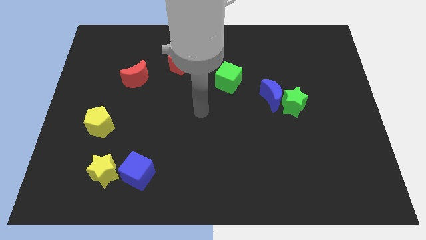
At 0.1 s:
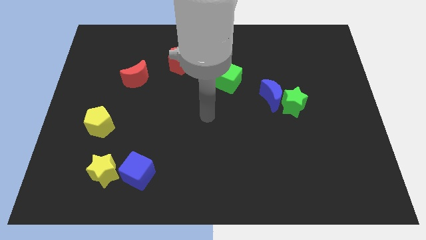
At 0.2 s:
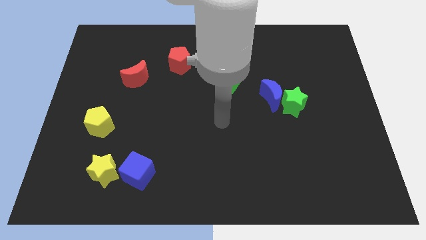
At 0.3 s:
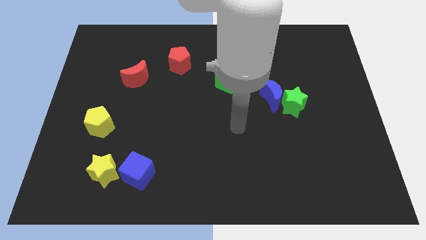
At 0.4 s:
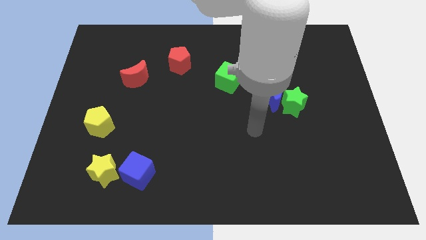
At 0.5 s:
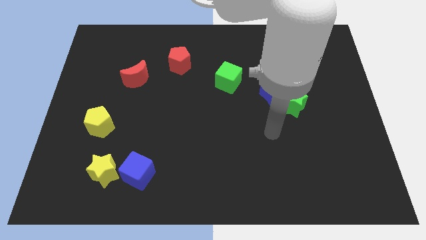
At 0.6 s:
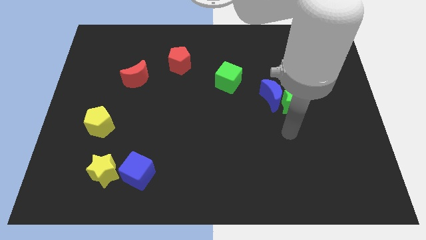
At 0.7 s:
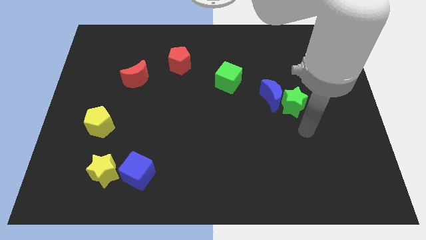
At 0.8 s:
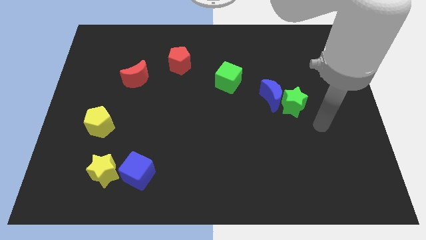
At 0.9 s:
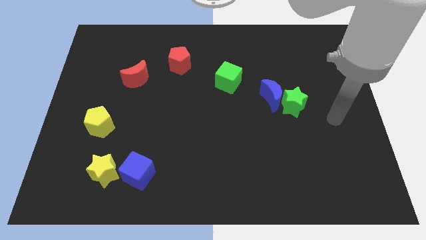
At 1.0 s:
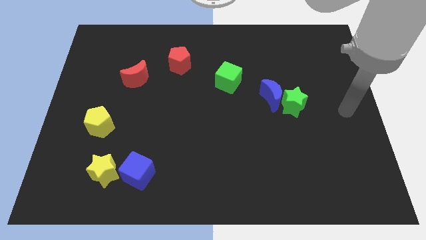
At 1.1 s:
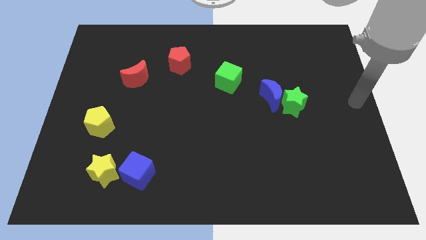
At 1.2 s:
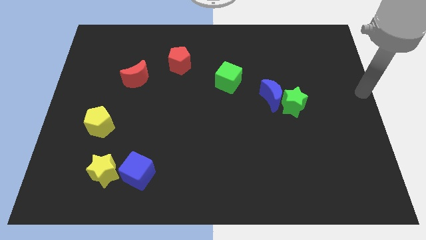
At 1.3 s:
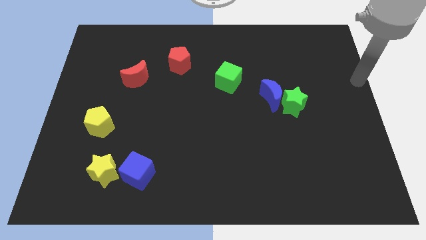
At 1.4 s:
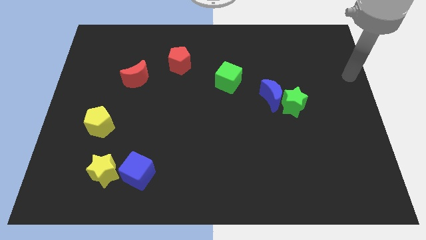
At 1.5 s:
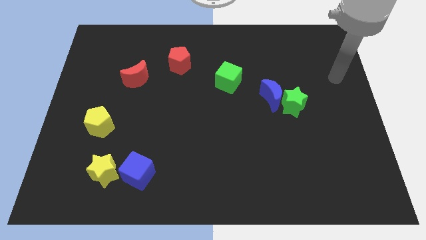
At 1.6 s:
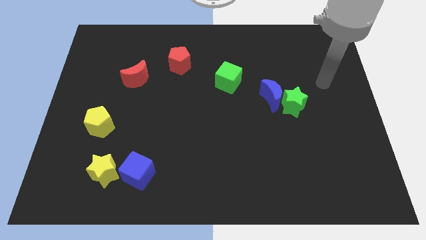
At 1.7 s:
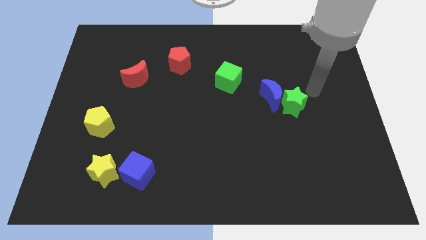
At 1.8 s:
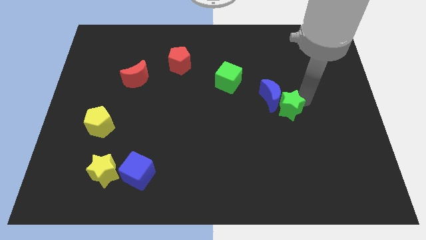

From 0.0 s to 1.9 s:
move your arm towards the right top of the green star

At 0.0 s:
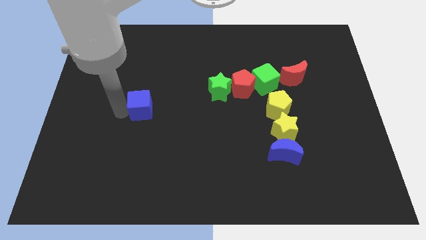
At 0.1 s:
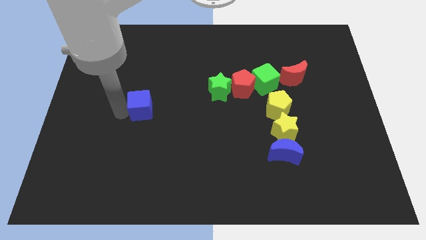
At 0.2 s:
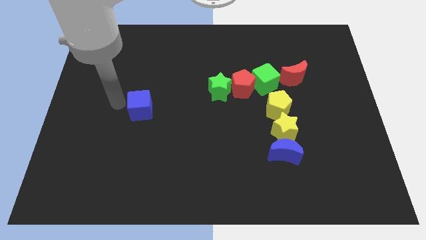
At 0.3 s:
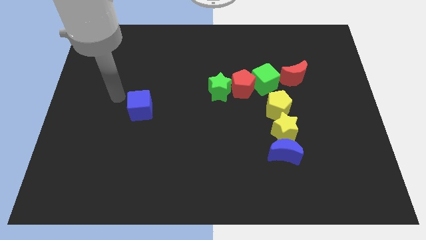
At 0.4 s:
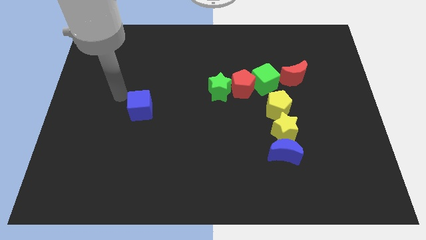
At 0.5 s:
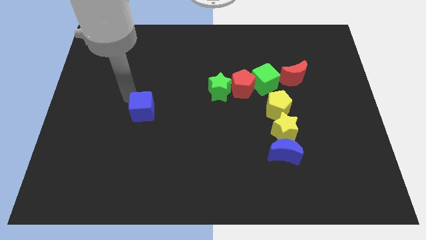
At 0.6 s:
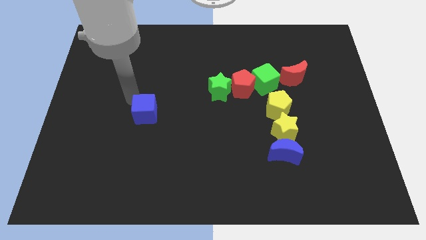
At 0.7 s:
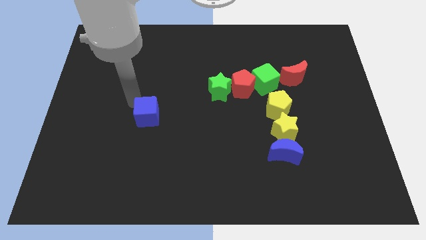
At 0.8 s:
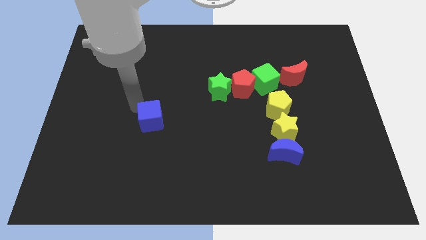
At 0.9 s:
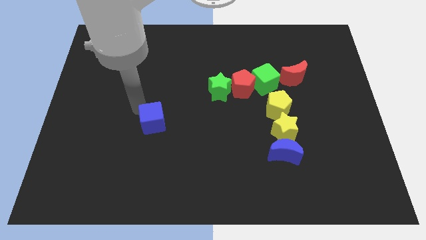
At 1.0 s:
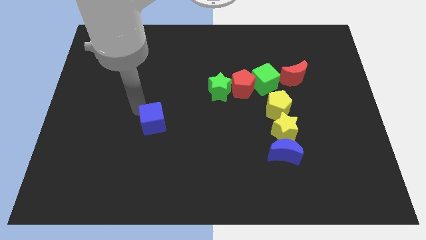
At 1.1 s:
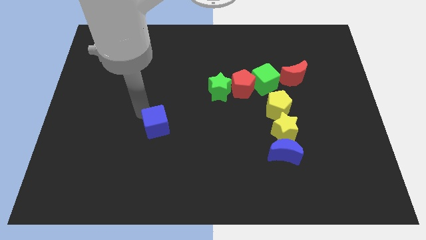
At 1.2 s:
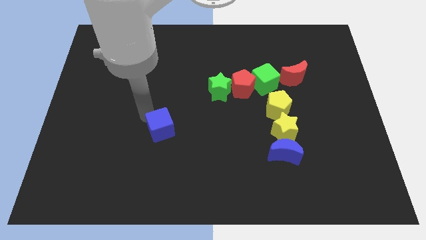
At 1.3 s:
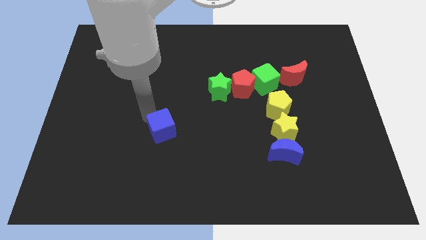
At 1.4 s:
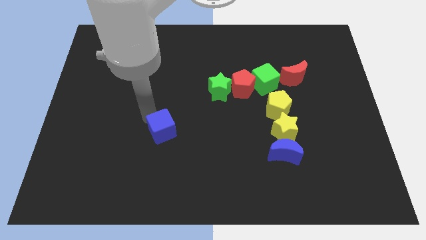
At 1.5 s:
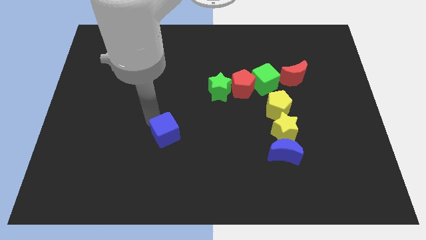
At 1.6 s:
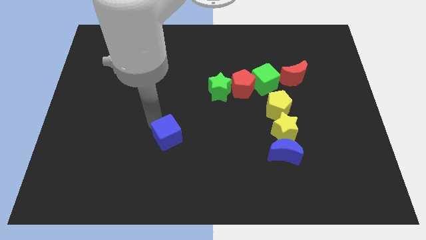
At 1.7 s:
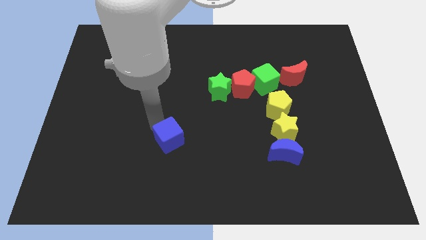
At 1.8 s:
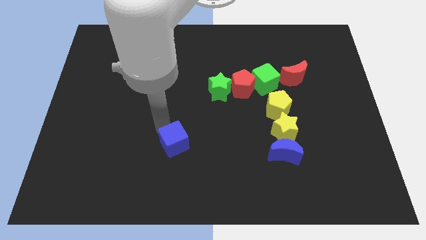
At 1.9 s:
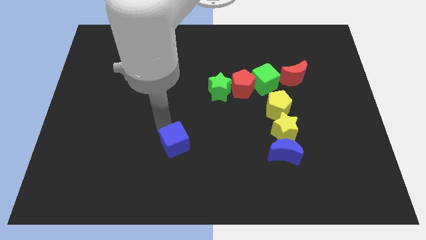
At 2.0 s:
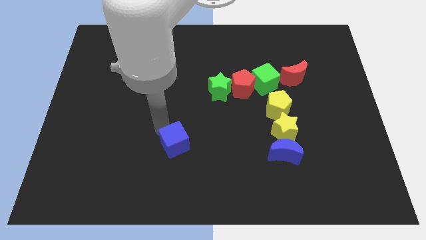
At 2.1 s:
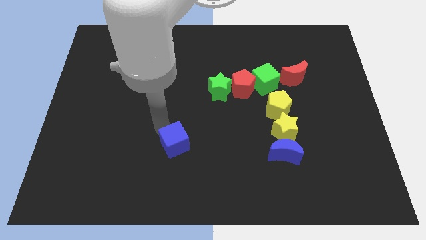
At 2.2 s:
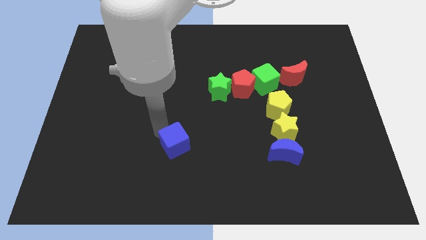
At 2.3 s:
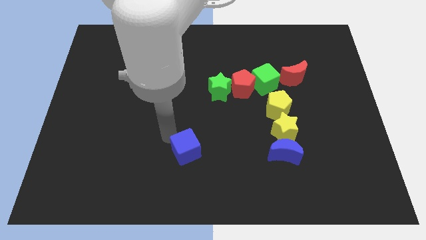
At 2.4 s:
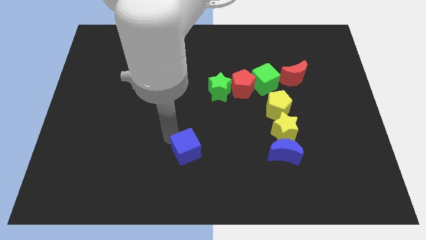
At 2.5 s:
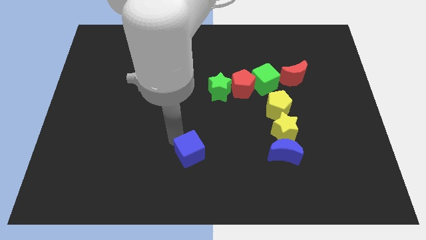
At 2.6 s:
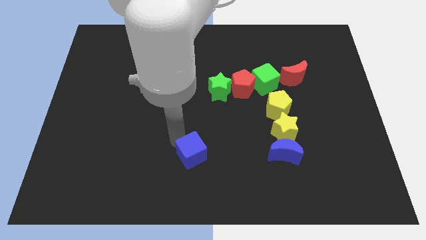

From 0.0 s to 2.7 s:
move blue cube left to the blue crescent

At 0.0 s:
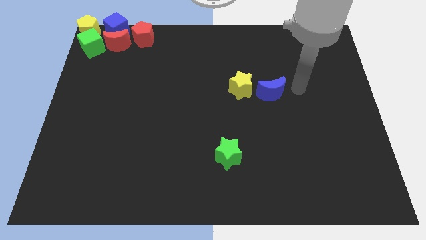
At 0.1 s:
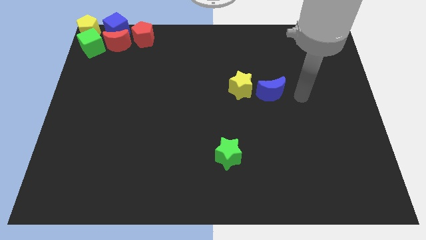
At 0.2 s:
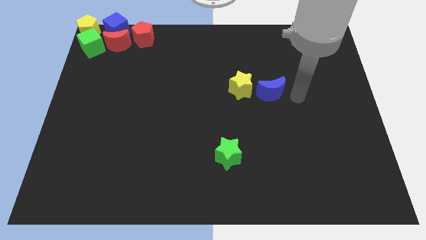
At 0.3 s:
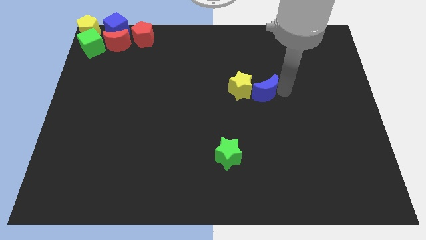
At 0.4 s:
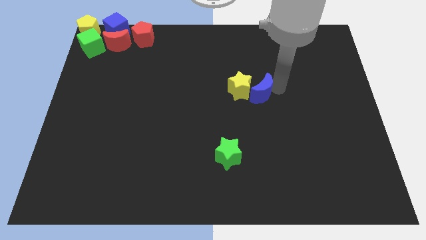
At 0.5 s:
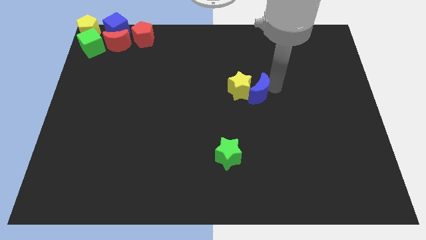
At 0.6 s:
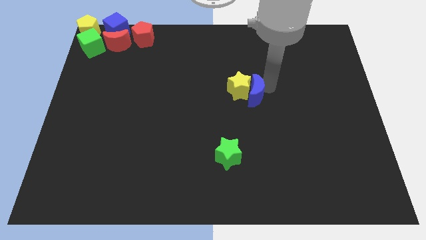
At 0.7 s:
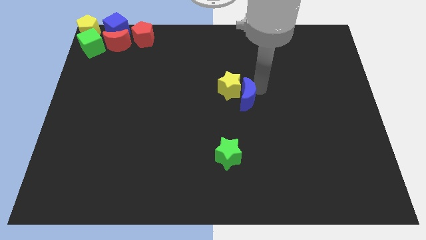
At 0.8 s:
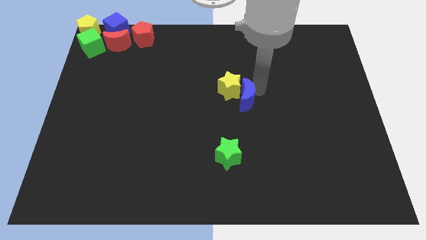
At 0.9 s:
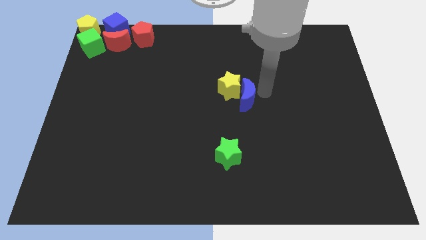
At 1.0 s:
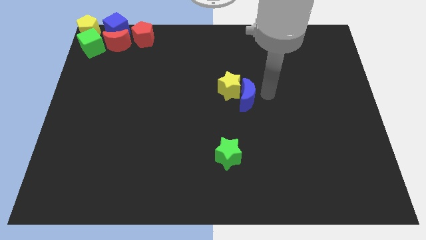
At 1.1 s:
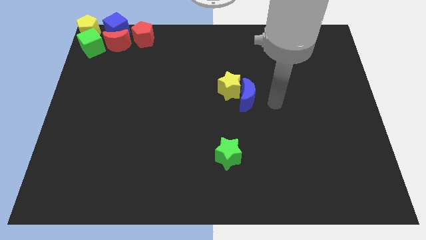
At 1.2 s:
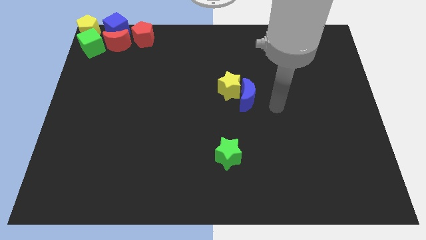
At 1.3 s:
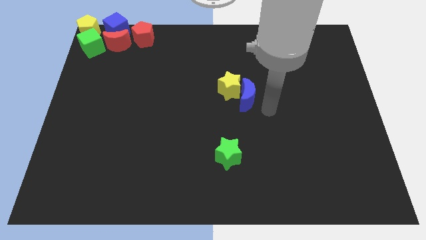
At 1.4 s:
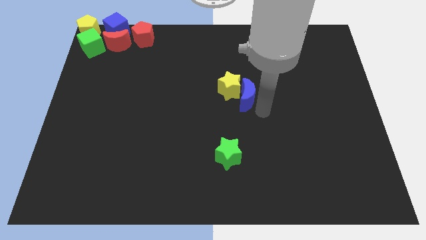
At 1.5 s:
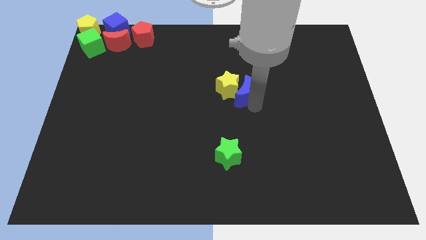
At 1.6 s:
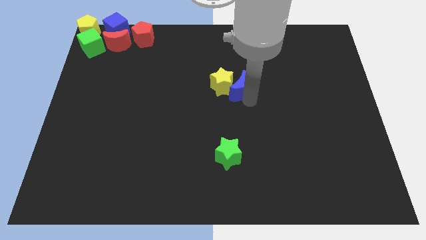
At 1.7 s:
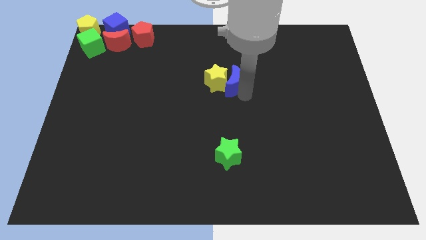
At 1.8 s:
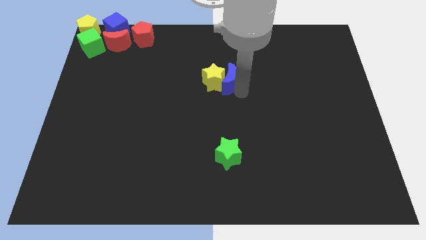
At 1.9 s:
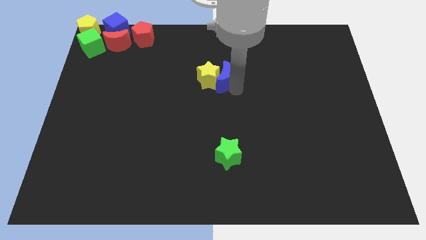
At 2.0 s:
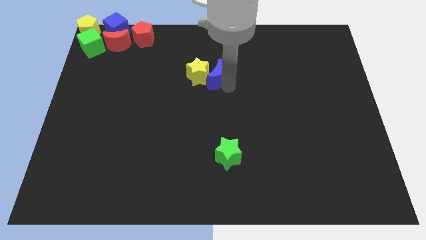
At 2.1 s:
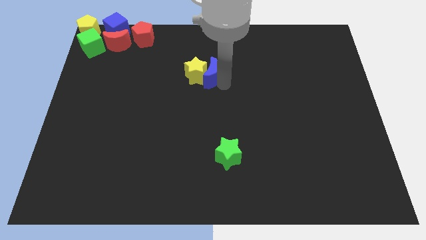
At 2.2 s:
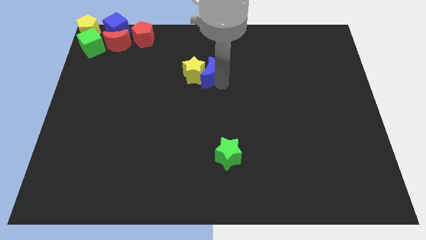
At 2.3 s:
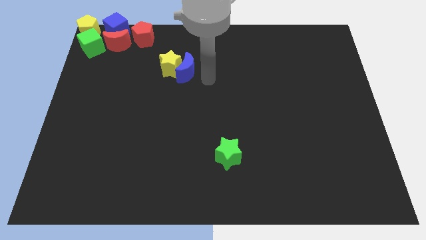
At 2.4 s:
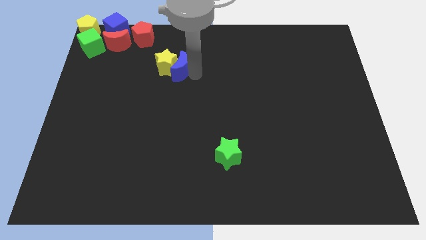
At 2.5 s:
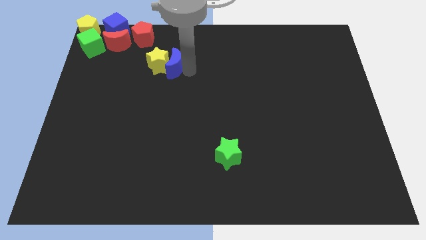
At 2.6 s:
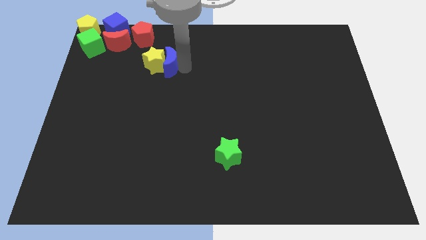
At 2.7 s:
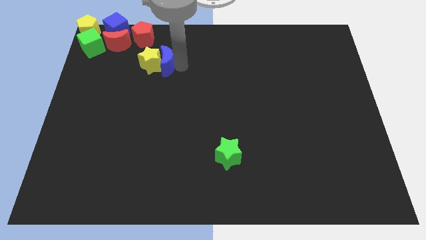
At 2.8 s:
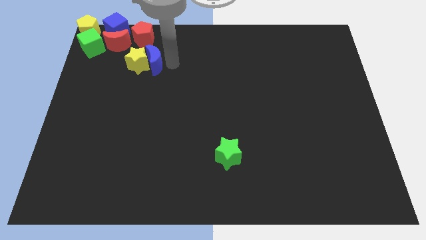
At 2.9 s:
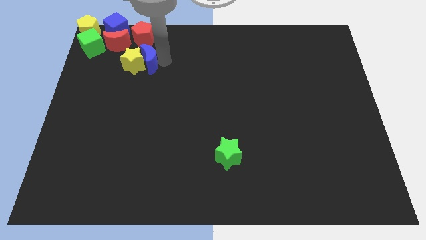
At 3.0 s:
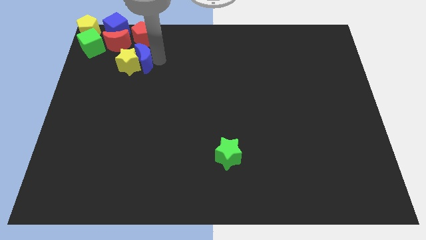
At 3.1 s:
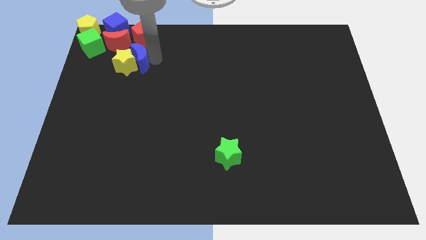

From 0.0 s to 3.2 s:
drag the yellow star and blue crescent towards the group of blocks

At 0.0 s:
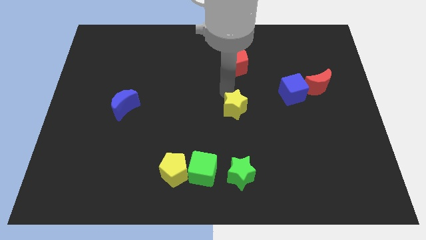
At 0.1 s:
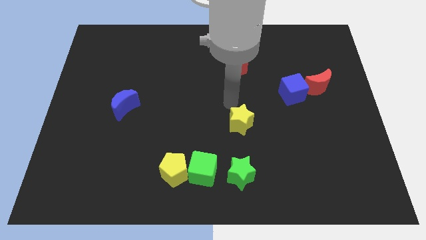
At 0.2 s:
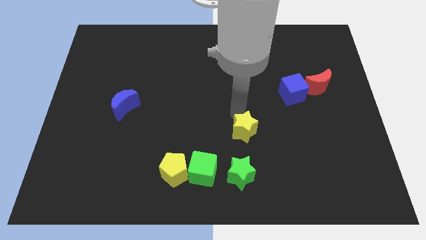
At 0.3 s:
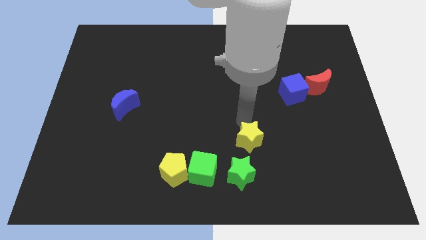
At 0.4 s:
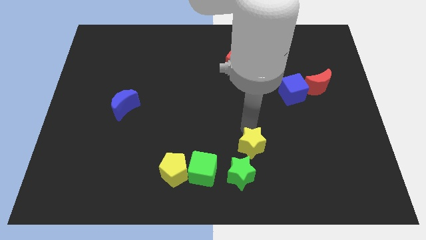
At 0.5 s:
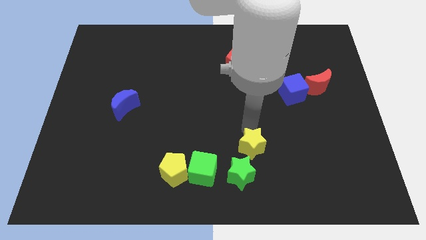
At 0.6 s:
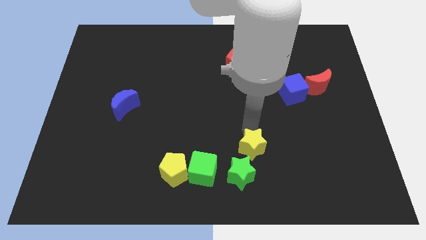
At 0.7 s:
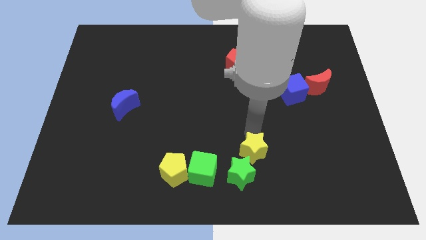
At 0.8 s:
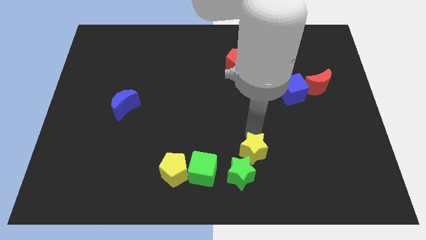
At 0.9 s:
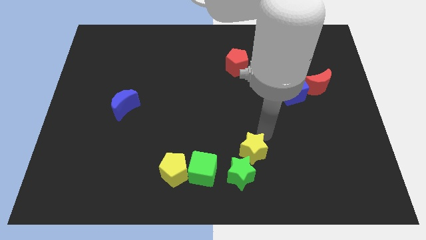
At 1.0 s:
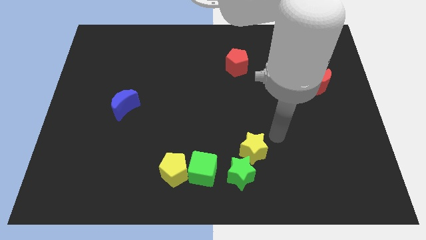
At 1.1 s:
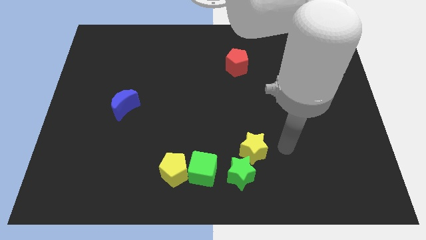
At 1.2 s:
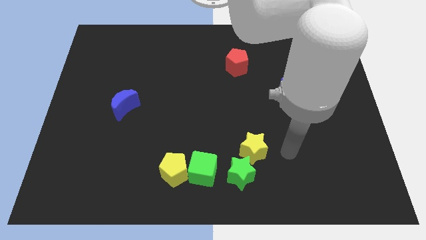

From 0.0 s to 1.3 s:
place the yellow star close to the green star
